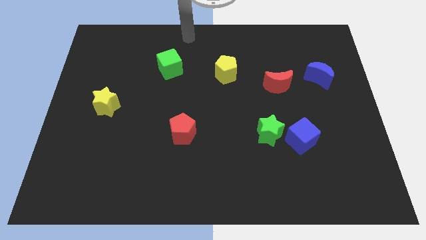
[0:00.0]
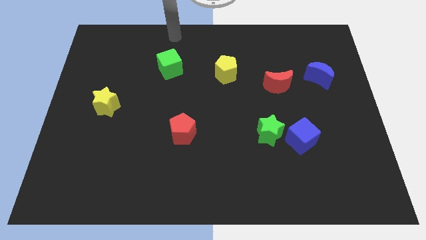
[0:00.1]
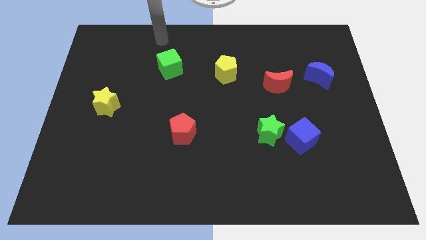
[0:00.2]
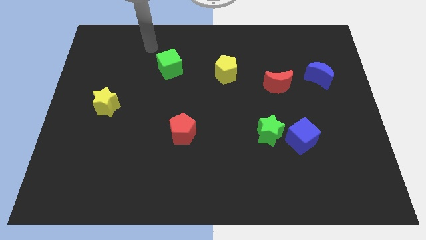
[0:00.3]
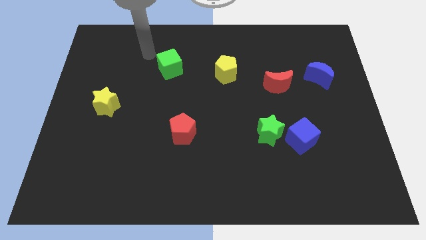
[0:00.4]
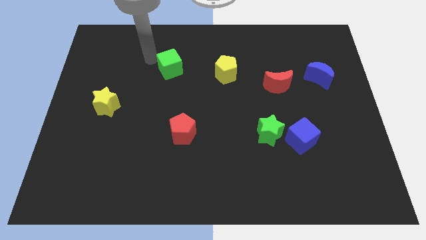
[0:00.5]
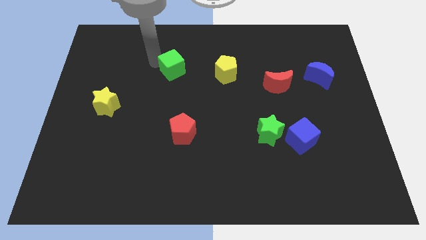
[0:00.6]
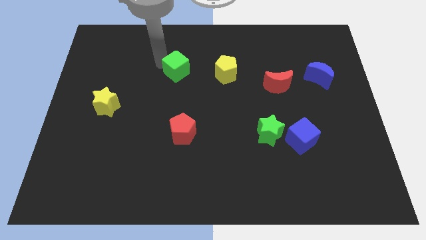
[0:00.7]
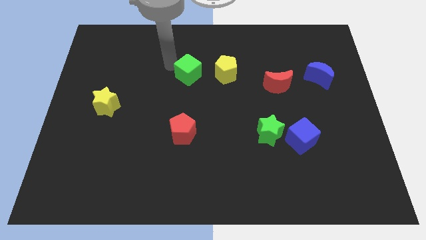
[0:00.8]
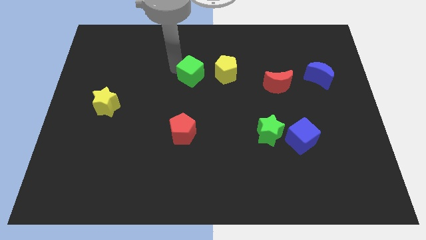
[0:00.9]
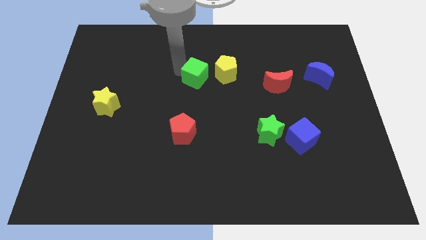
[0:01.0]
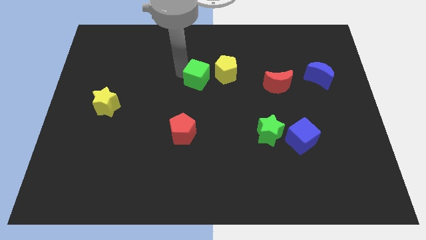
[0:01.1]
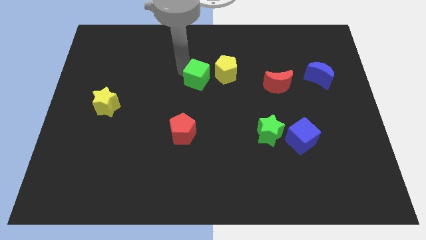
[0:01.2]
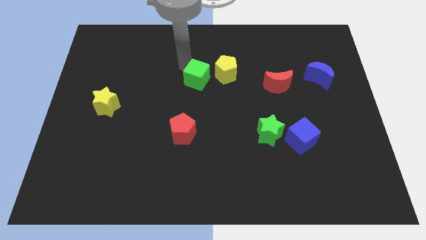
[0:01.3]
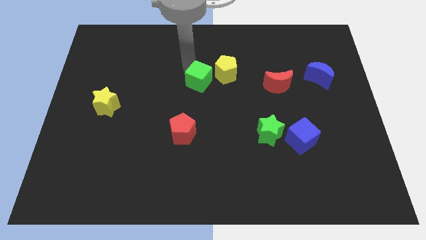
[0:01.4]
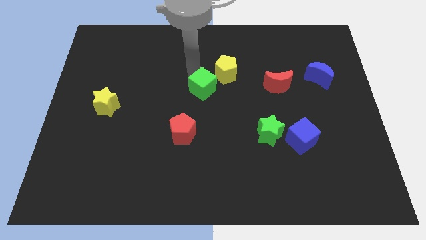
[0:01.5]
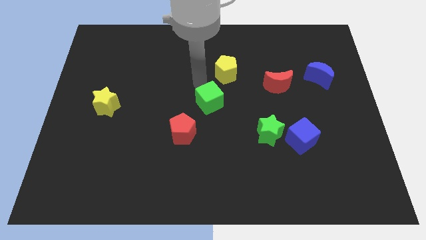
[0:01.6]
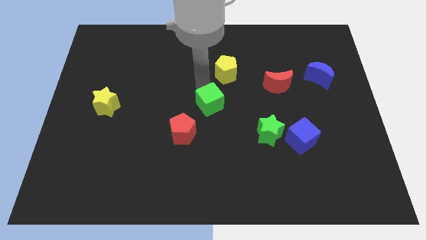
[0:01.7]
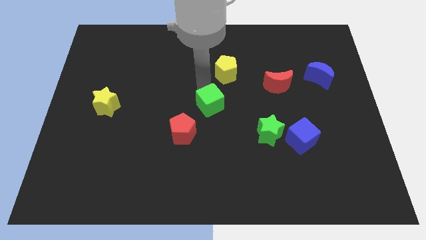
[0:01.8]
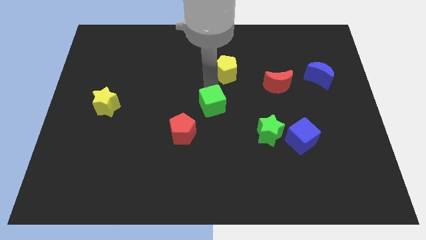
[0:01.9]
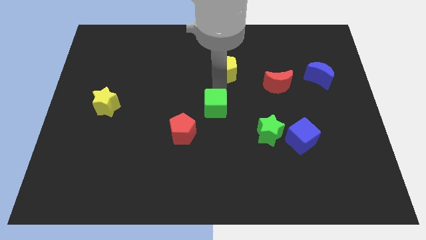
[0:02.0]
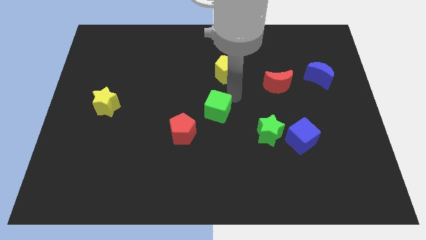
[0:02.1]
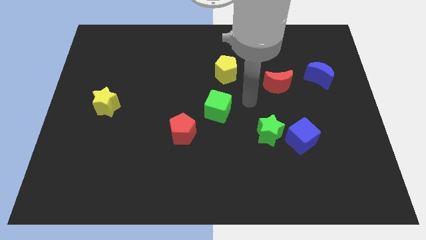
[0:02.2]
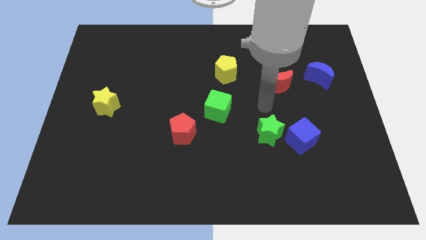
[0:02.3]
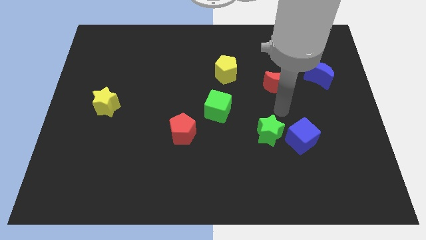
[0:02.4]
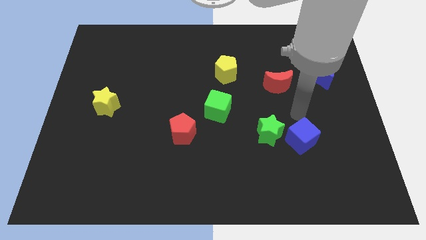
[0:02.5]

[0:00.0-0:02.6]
move the green cube in between red blocks

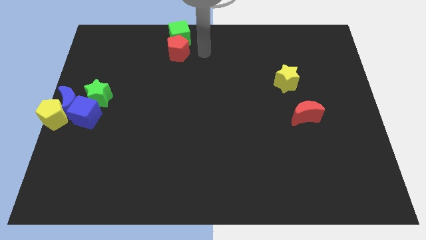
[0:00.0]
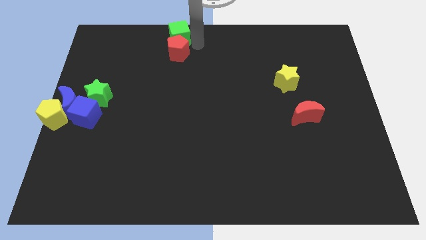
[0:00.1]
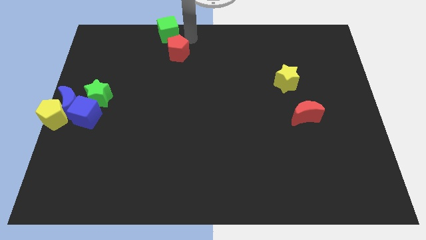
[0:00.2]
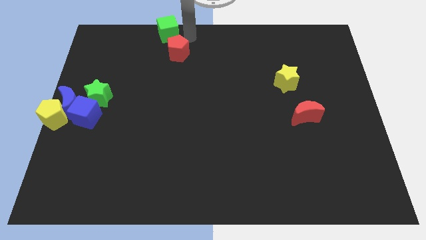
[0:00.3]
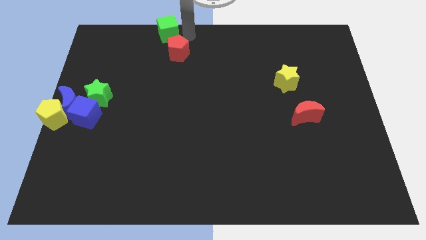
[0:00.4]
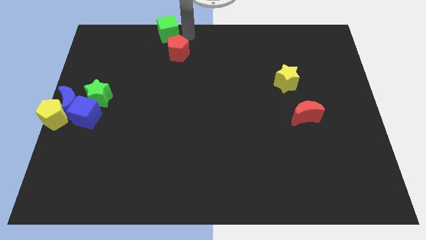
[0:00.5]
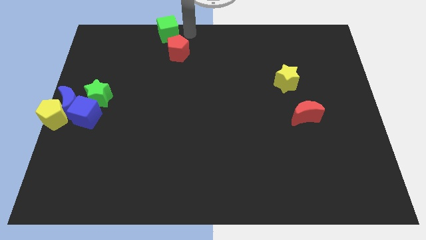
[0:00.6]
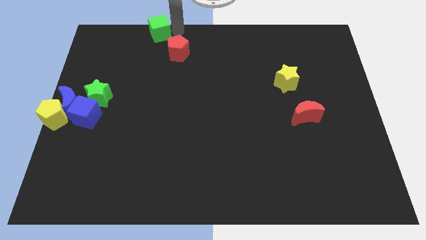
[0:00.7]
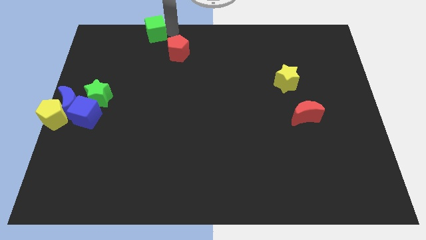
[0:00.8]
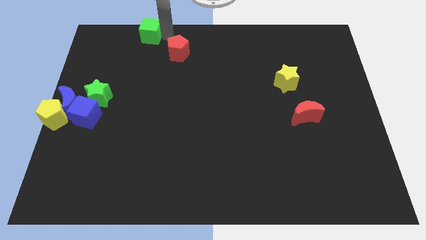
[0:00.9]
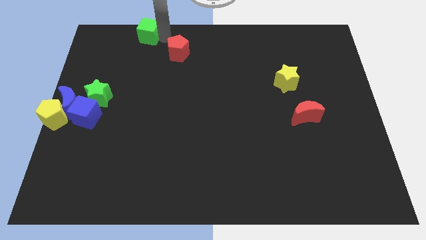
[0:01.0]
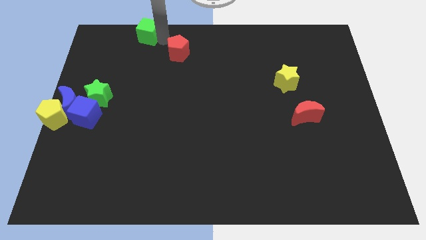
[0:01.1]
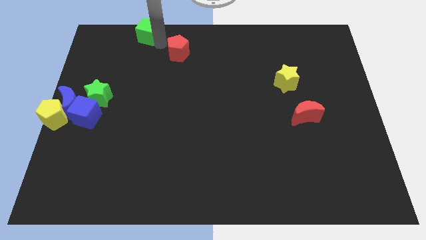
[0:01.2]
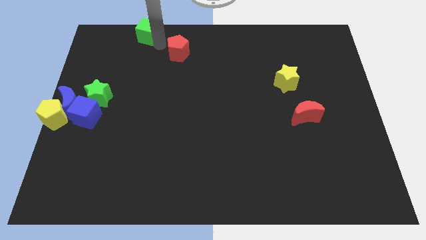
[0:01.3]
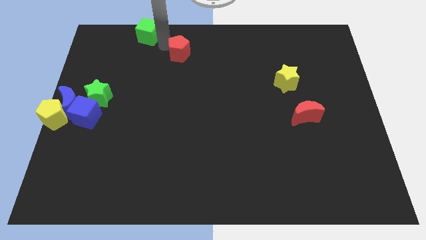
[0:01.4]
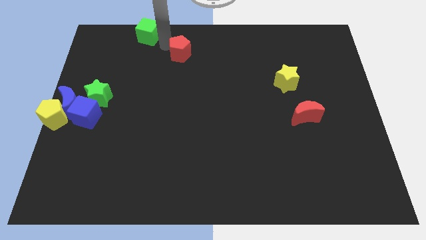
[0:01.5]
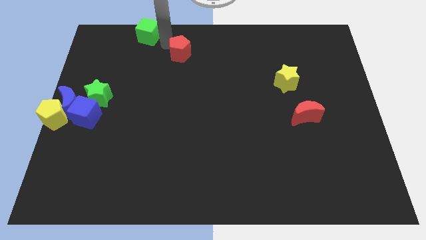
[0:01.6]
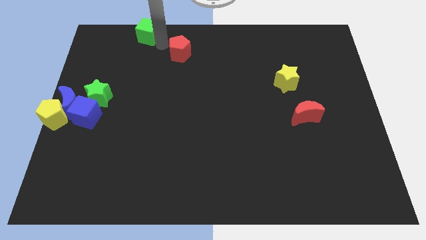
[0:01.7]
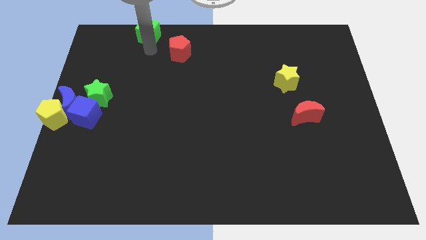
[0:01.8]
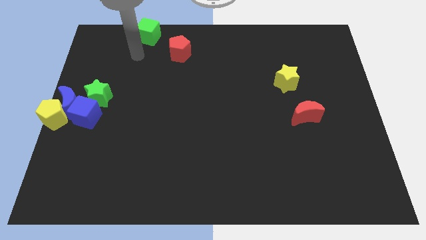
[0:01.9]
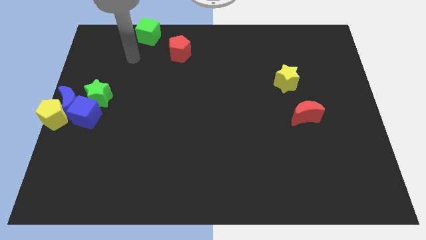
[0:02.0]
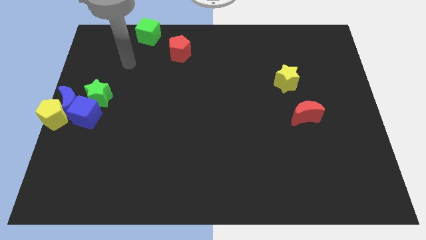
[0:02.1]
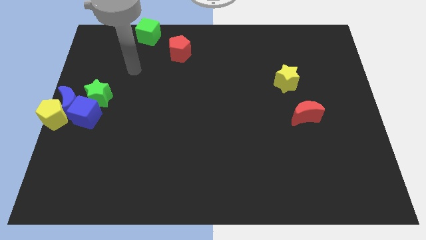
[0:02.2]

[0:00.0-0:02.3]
separate the green cube and red pentagon

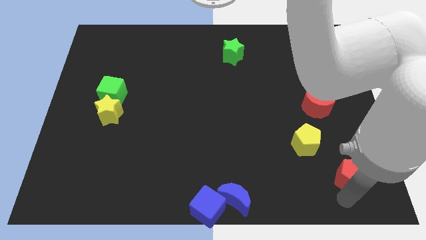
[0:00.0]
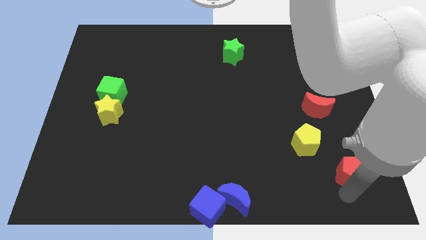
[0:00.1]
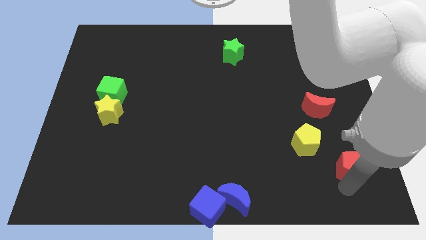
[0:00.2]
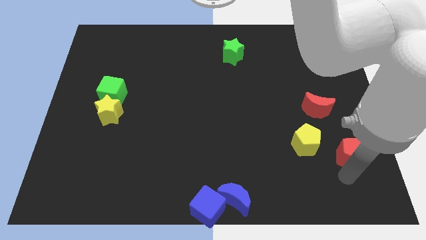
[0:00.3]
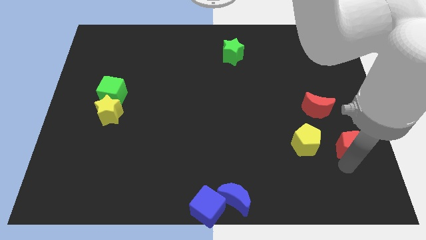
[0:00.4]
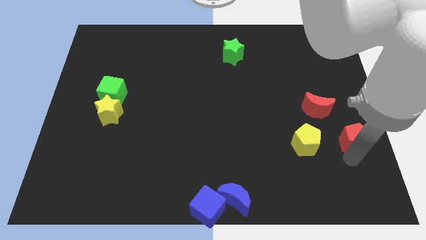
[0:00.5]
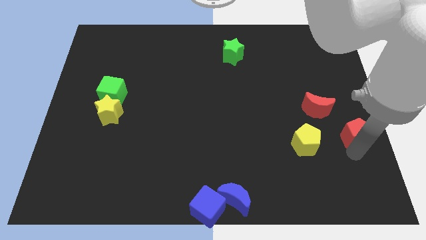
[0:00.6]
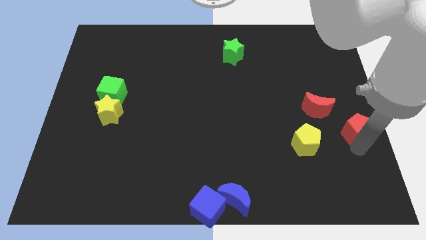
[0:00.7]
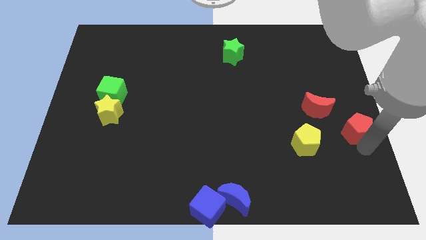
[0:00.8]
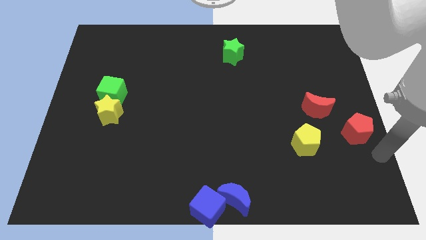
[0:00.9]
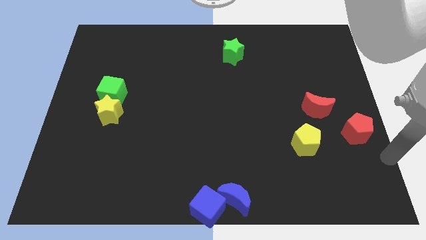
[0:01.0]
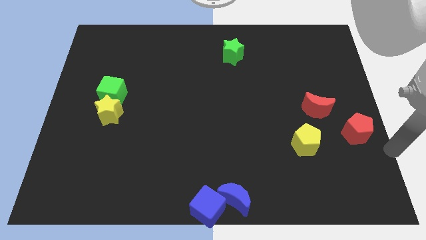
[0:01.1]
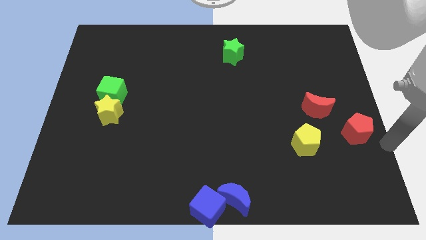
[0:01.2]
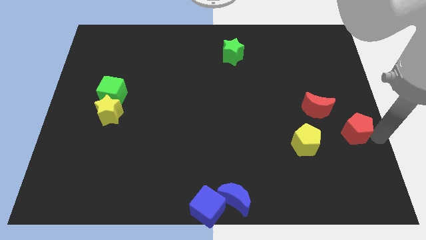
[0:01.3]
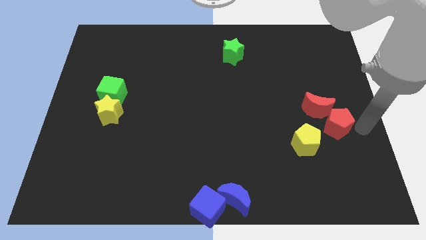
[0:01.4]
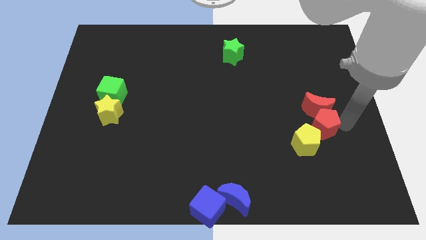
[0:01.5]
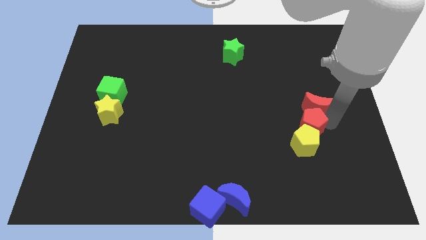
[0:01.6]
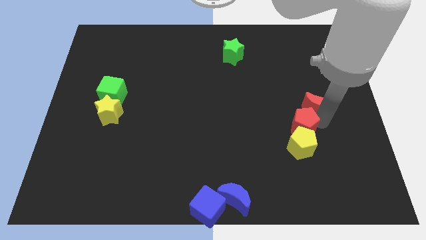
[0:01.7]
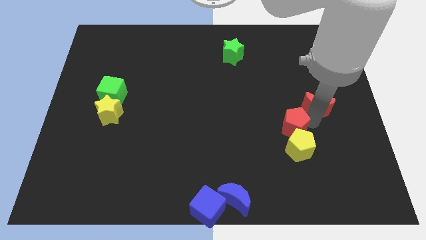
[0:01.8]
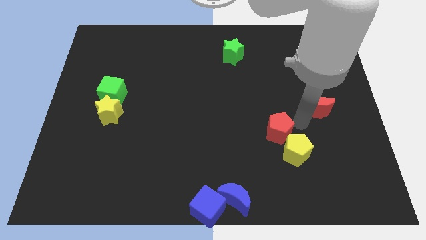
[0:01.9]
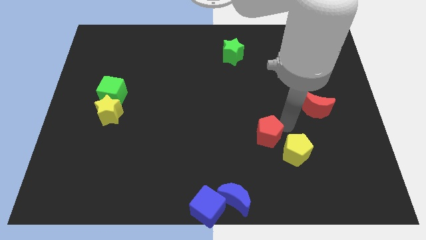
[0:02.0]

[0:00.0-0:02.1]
put the red pentagon and yellow pentagon together

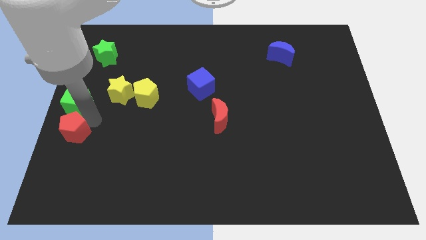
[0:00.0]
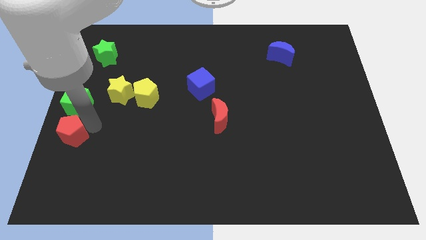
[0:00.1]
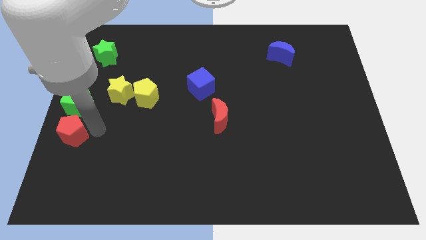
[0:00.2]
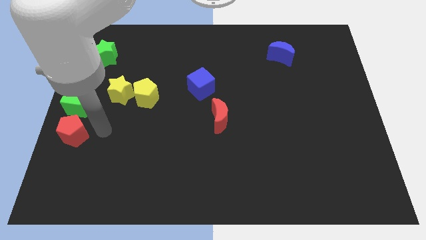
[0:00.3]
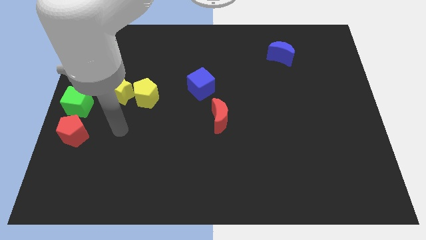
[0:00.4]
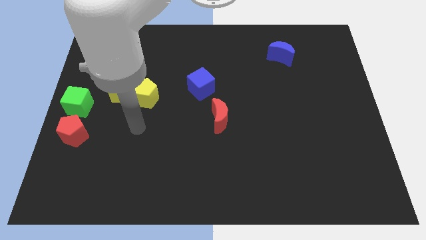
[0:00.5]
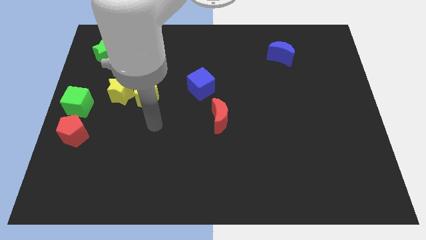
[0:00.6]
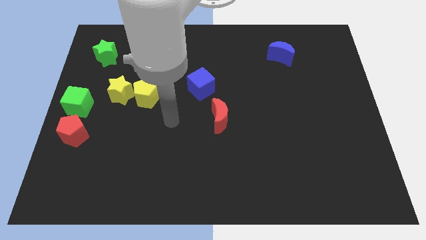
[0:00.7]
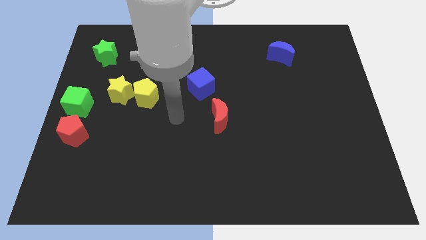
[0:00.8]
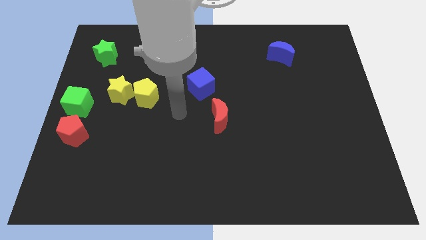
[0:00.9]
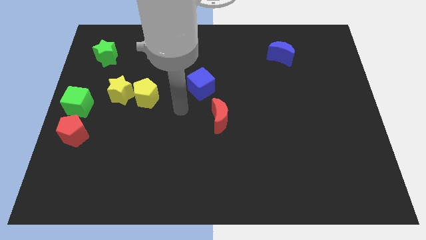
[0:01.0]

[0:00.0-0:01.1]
move your arm away from the red pentagon

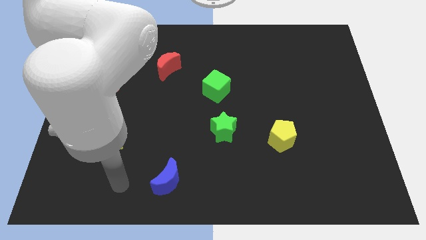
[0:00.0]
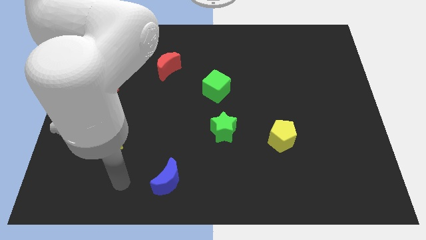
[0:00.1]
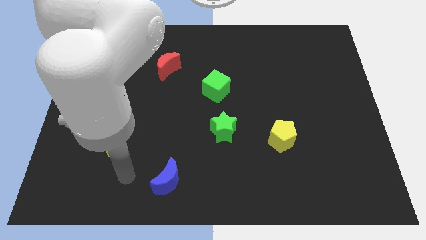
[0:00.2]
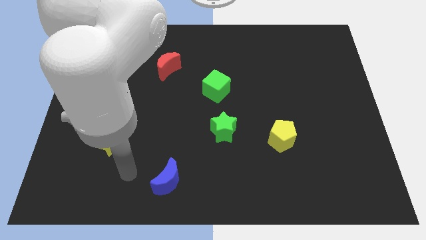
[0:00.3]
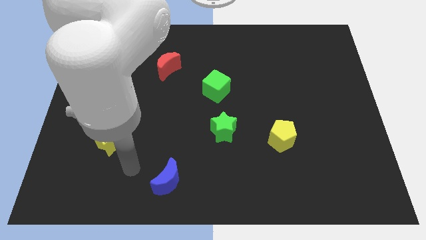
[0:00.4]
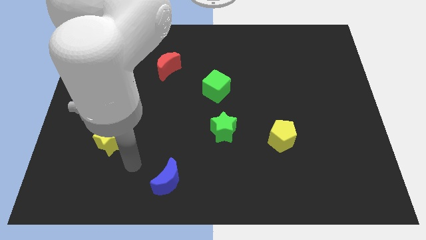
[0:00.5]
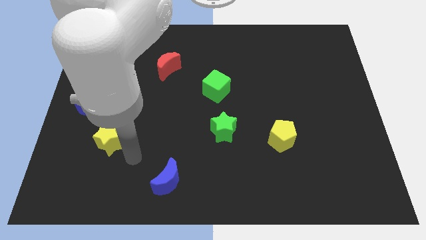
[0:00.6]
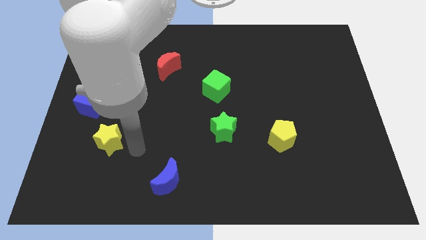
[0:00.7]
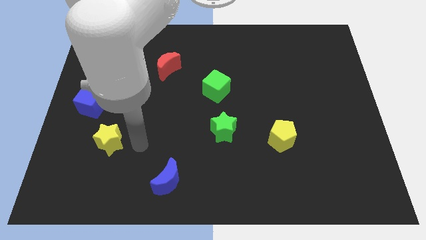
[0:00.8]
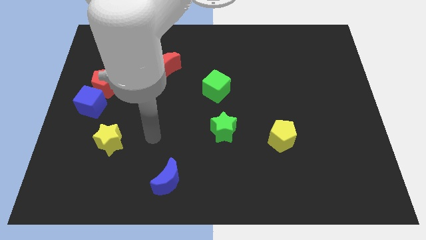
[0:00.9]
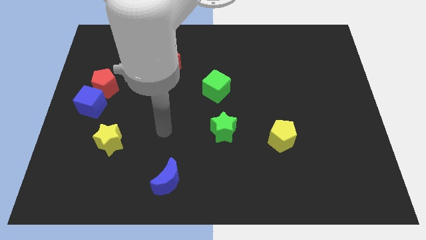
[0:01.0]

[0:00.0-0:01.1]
place your hand at the top side of the blue crescent
